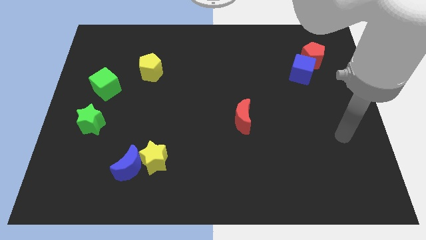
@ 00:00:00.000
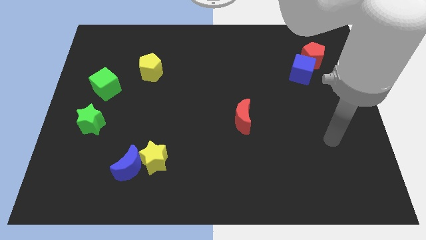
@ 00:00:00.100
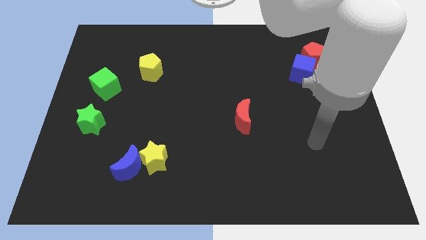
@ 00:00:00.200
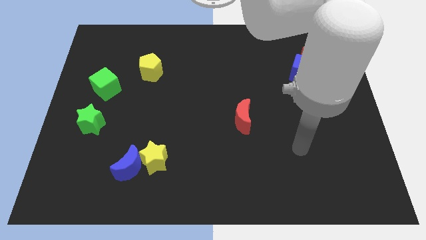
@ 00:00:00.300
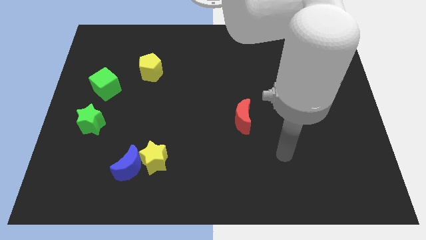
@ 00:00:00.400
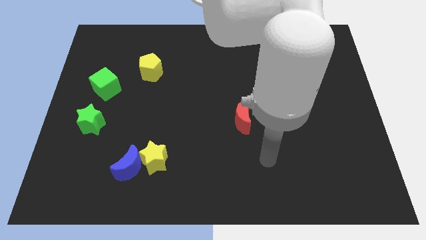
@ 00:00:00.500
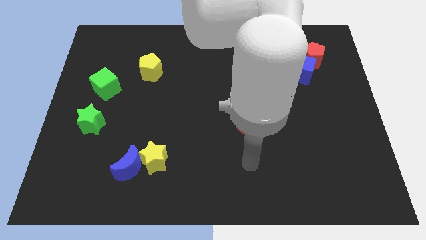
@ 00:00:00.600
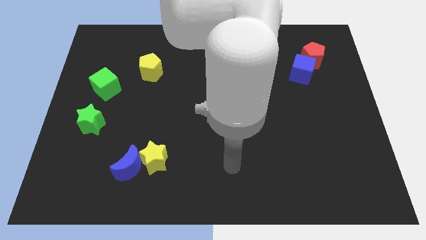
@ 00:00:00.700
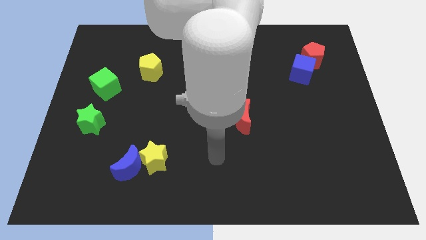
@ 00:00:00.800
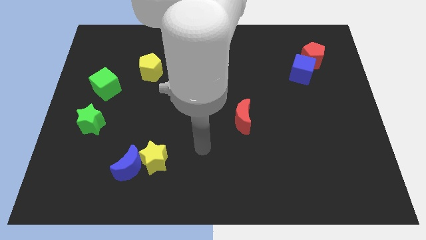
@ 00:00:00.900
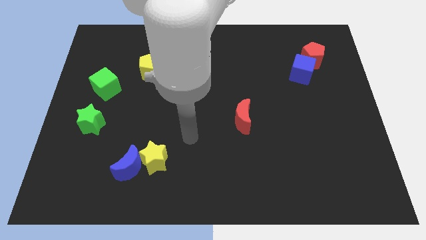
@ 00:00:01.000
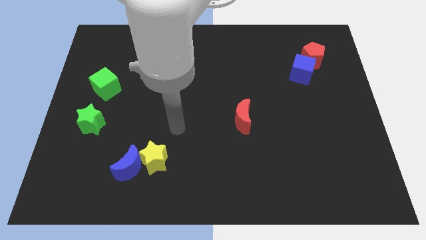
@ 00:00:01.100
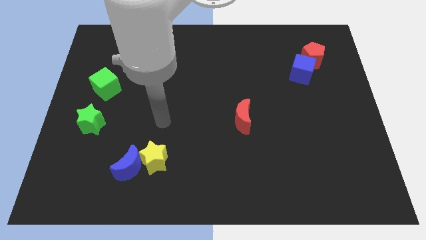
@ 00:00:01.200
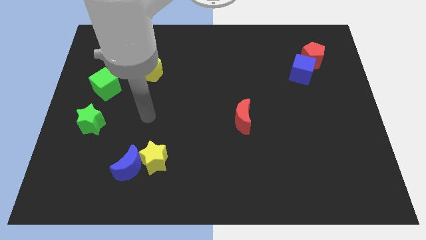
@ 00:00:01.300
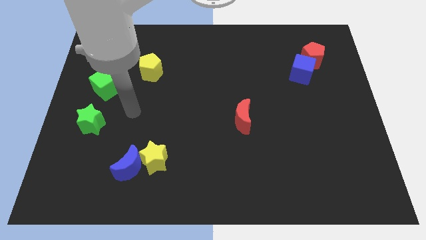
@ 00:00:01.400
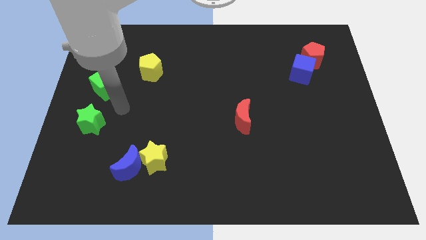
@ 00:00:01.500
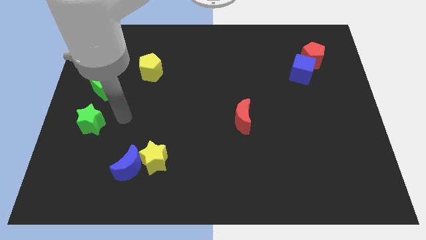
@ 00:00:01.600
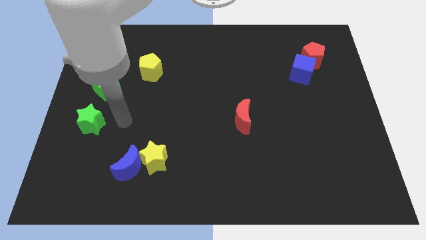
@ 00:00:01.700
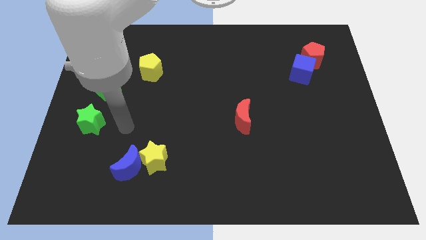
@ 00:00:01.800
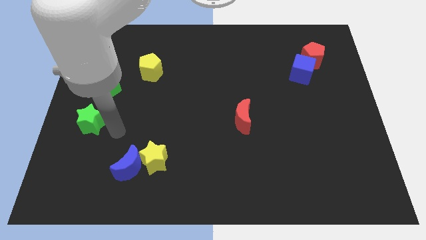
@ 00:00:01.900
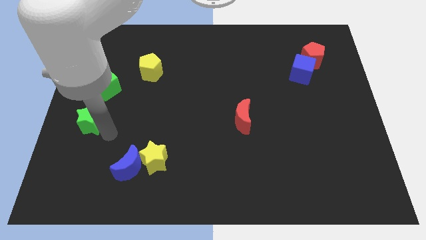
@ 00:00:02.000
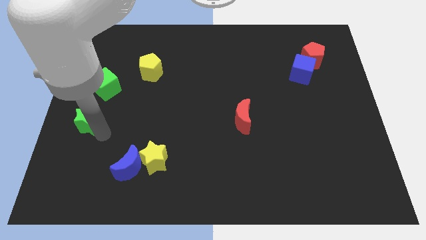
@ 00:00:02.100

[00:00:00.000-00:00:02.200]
touch at the right side of the green star

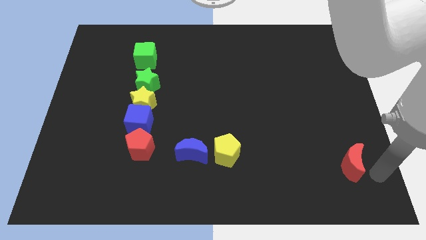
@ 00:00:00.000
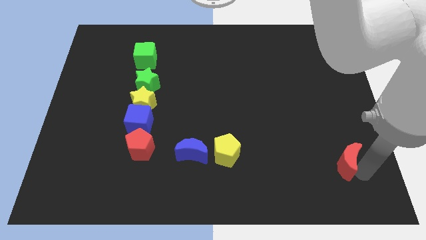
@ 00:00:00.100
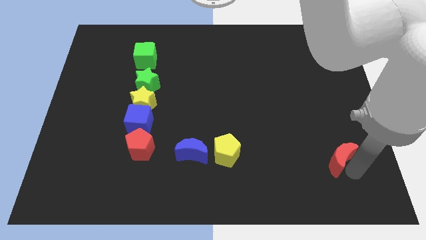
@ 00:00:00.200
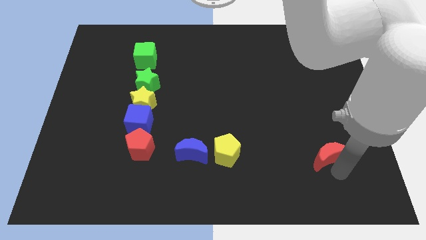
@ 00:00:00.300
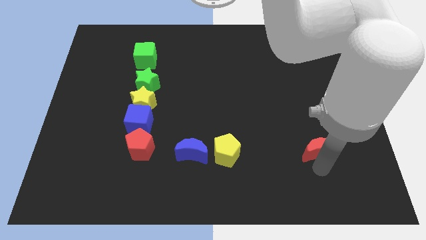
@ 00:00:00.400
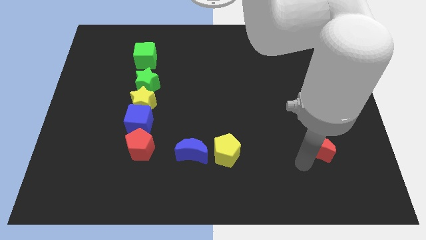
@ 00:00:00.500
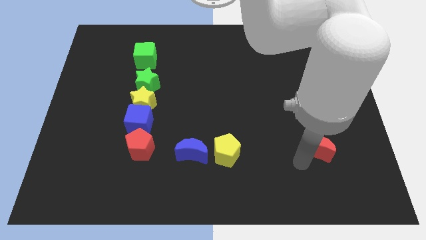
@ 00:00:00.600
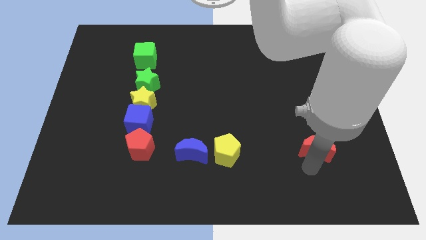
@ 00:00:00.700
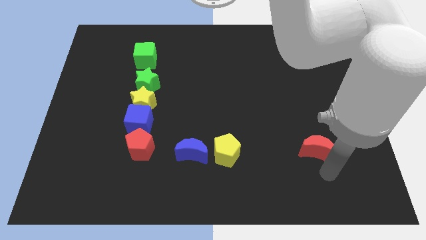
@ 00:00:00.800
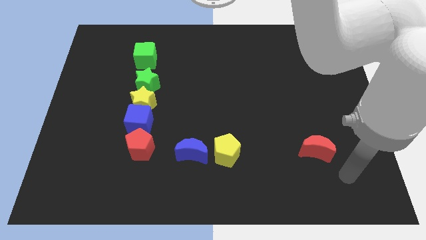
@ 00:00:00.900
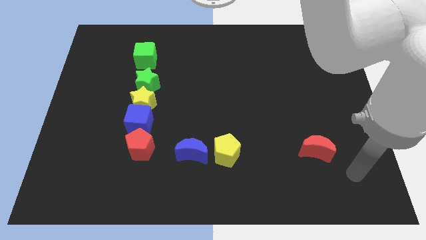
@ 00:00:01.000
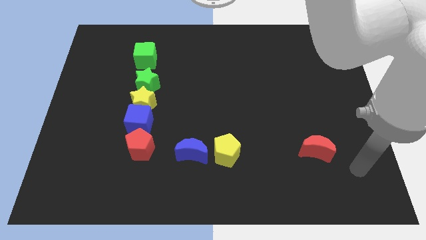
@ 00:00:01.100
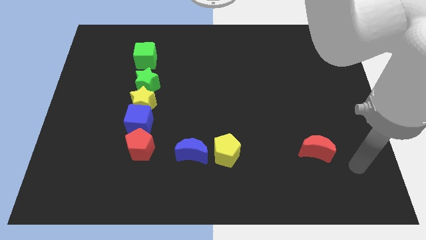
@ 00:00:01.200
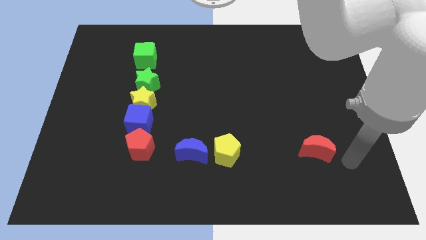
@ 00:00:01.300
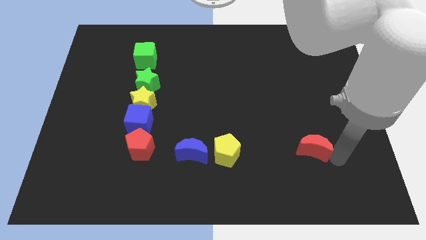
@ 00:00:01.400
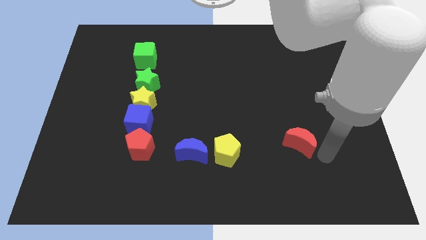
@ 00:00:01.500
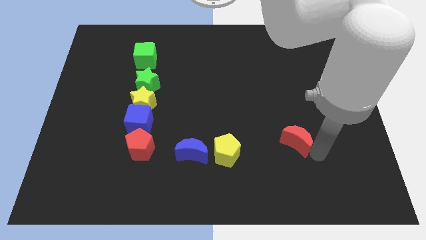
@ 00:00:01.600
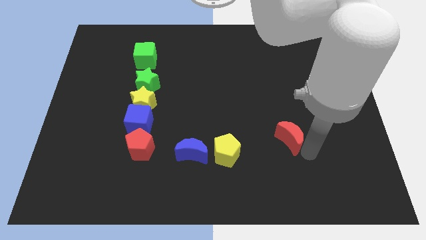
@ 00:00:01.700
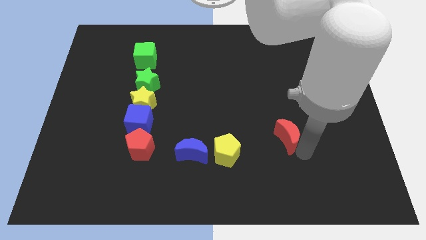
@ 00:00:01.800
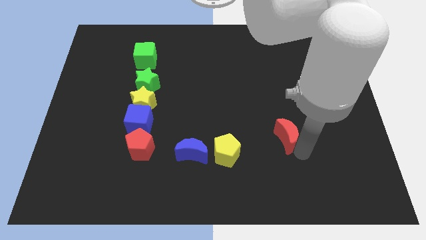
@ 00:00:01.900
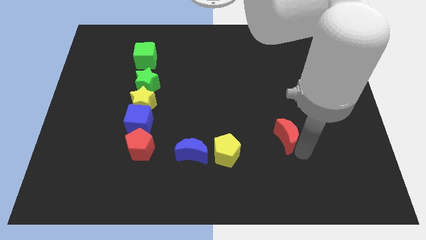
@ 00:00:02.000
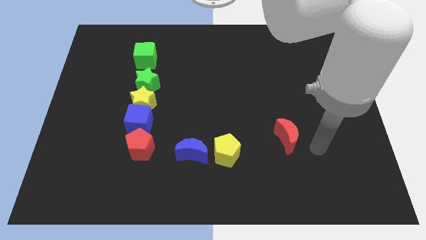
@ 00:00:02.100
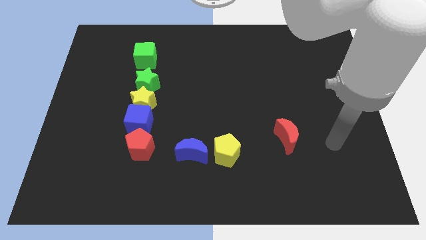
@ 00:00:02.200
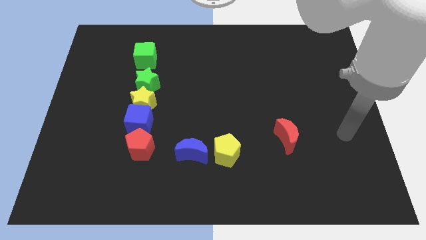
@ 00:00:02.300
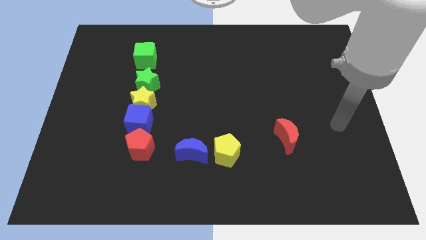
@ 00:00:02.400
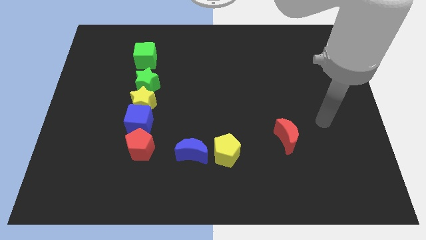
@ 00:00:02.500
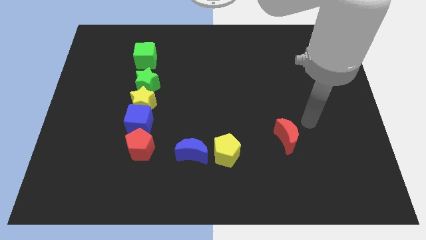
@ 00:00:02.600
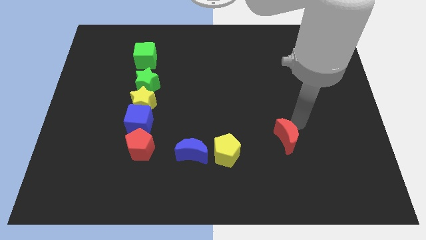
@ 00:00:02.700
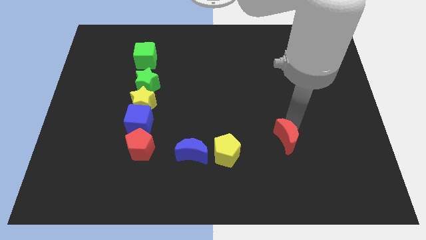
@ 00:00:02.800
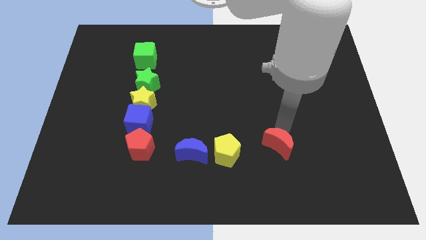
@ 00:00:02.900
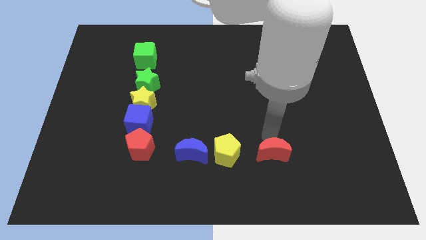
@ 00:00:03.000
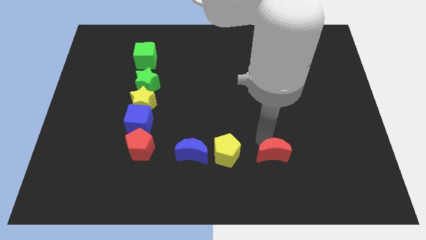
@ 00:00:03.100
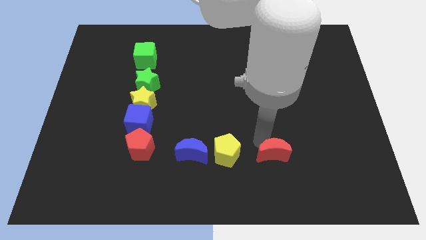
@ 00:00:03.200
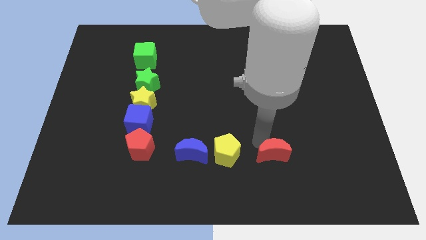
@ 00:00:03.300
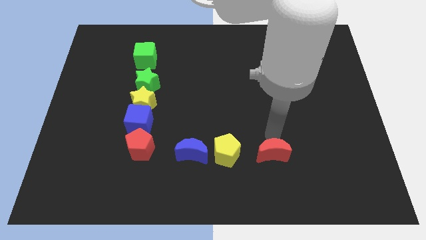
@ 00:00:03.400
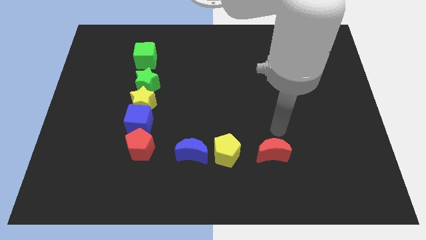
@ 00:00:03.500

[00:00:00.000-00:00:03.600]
put the red crescent to the right side of the yellow pentagon

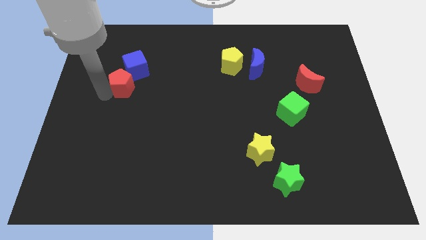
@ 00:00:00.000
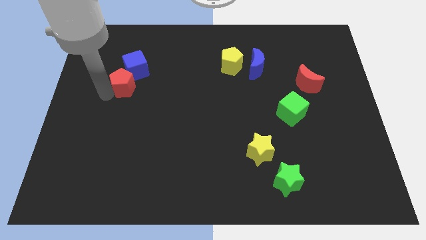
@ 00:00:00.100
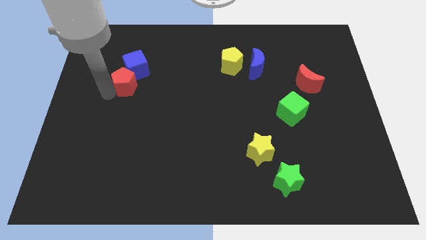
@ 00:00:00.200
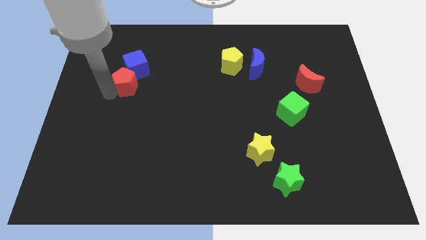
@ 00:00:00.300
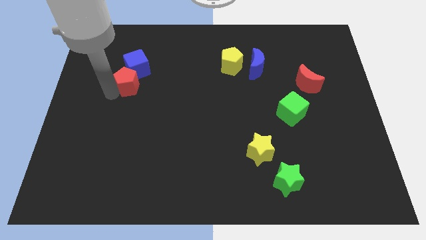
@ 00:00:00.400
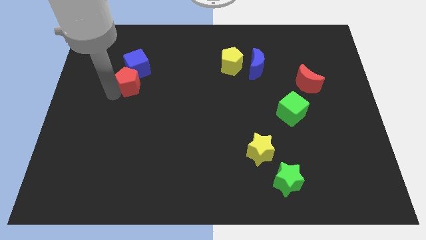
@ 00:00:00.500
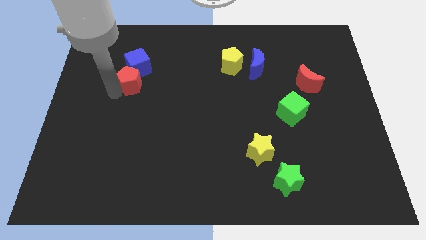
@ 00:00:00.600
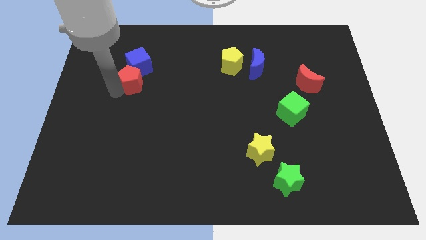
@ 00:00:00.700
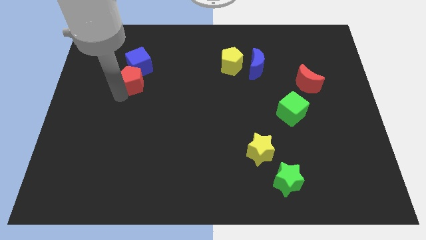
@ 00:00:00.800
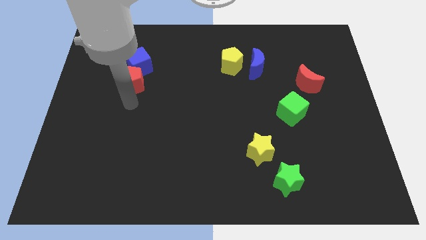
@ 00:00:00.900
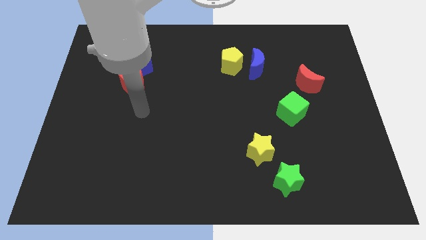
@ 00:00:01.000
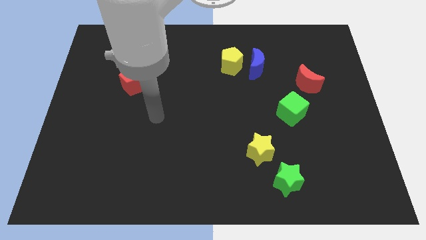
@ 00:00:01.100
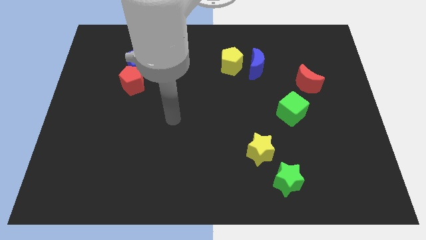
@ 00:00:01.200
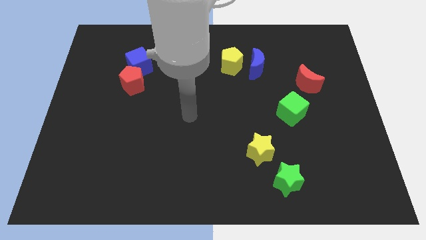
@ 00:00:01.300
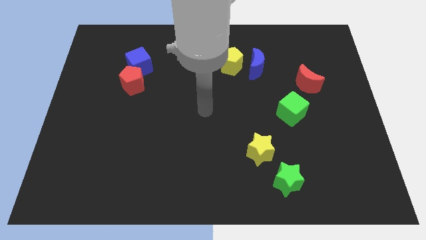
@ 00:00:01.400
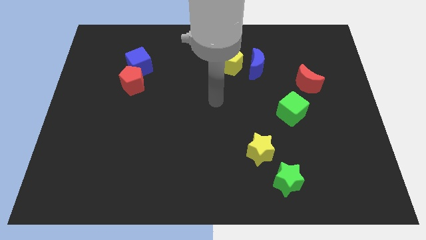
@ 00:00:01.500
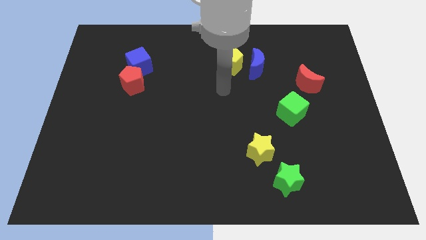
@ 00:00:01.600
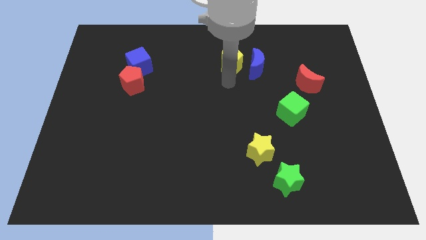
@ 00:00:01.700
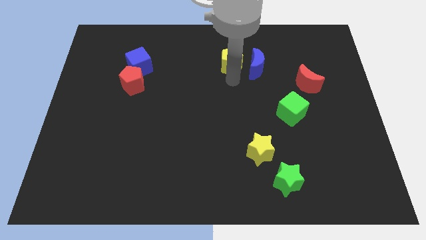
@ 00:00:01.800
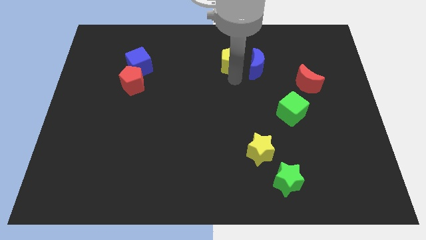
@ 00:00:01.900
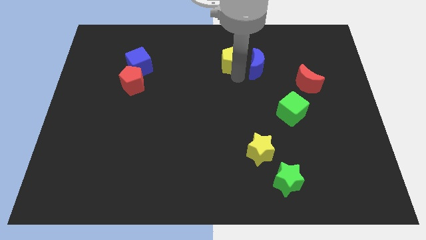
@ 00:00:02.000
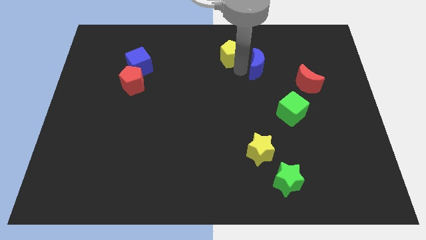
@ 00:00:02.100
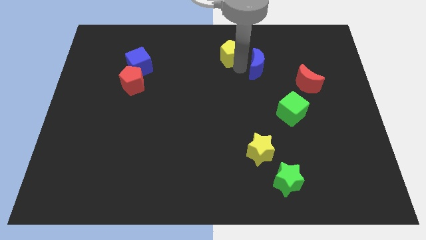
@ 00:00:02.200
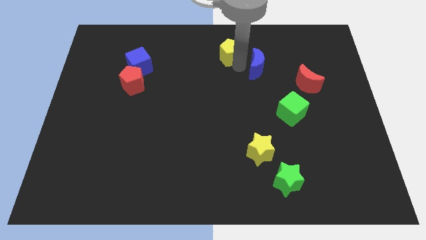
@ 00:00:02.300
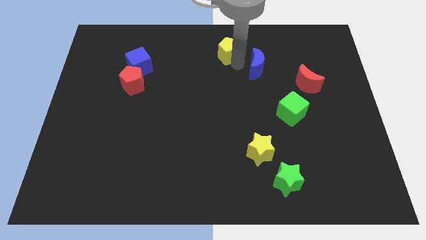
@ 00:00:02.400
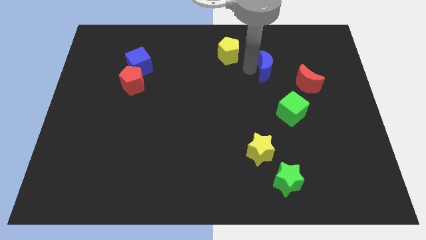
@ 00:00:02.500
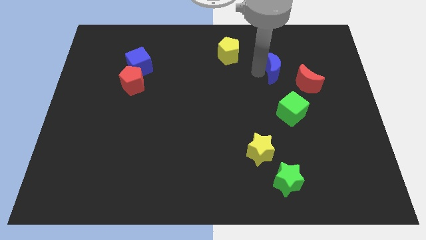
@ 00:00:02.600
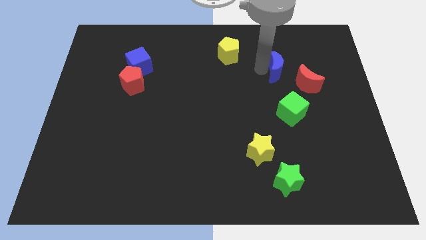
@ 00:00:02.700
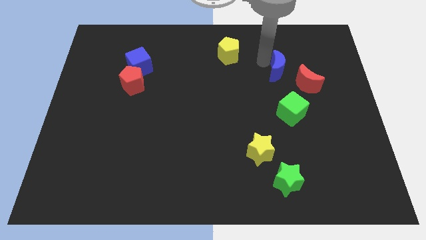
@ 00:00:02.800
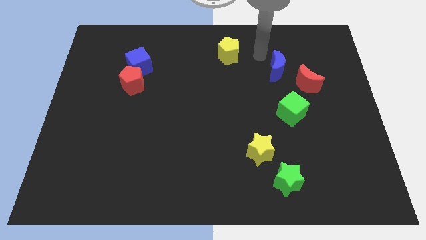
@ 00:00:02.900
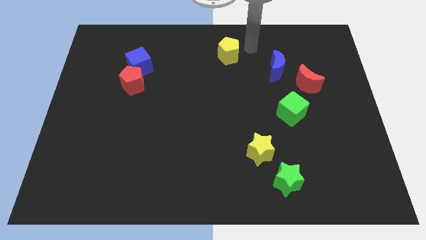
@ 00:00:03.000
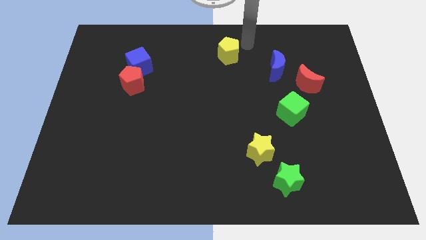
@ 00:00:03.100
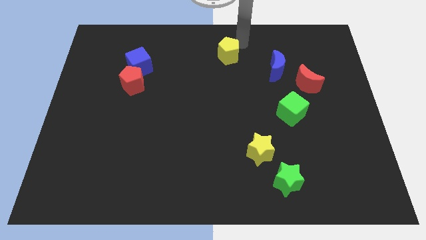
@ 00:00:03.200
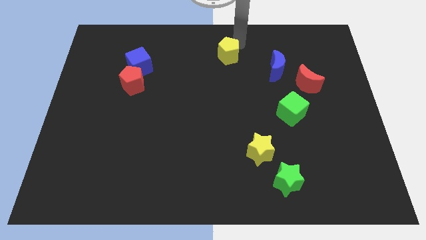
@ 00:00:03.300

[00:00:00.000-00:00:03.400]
move the blue moon slightly right
